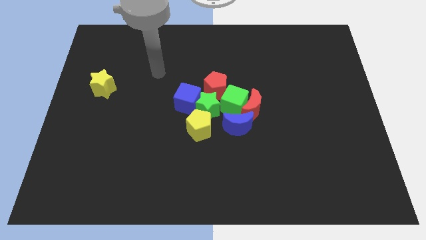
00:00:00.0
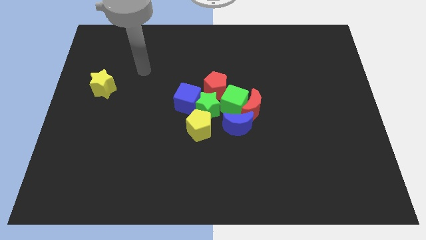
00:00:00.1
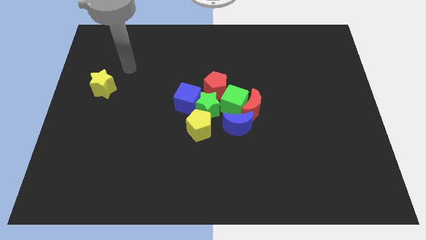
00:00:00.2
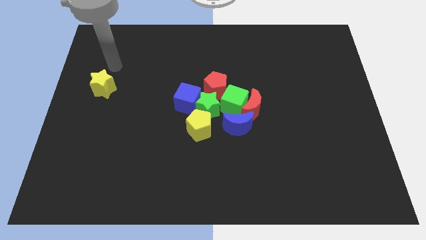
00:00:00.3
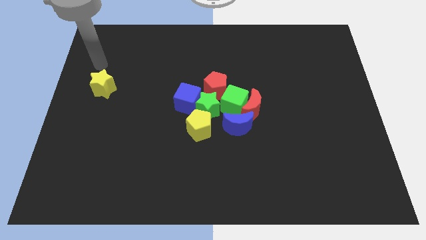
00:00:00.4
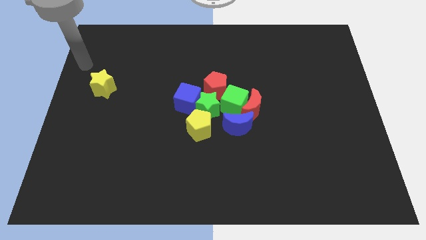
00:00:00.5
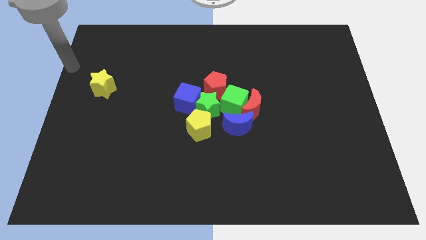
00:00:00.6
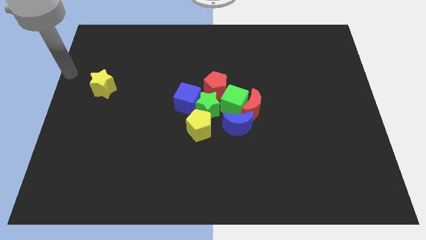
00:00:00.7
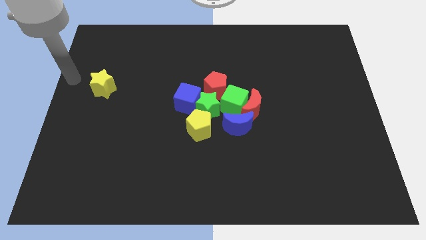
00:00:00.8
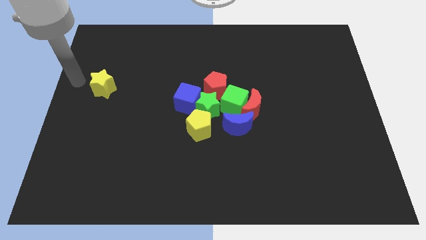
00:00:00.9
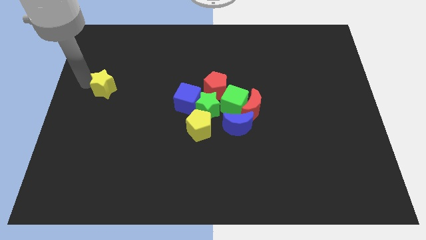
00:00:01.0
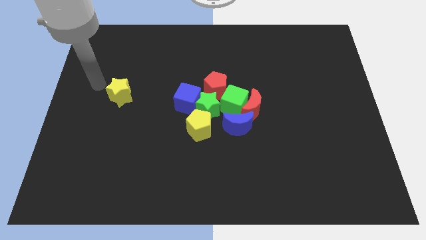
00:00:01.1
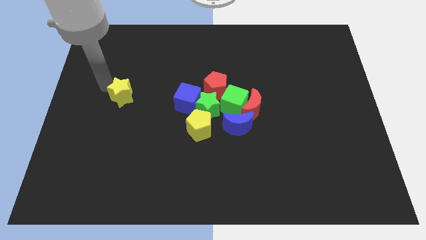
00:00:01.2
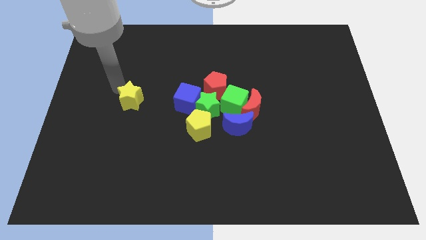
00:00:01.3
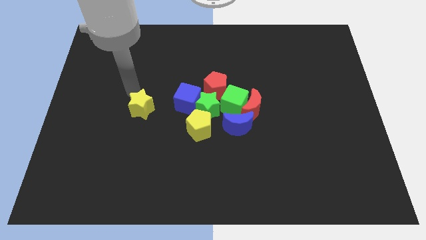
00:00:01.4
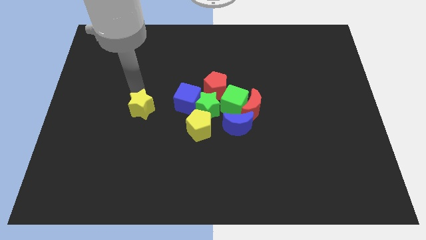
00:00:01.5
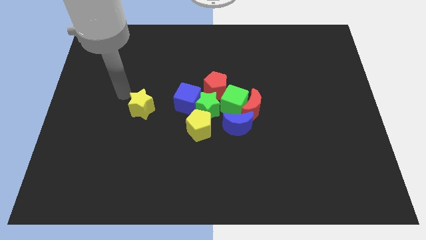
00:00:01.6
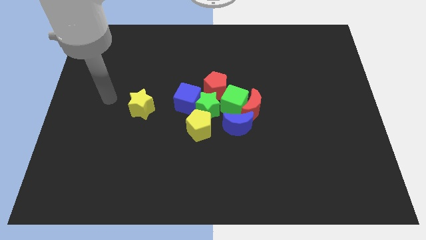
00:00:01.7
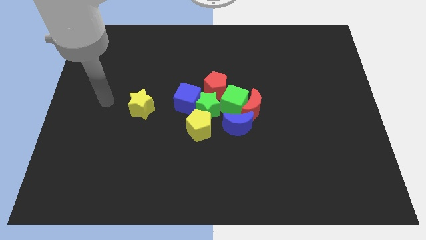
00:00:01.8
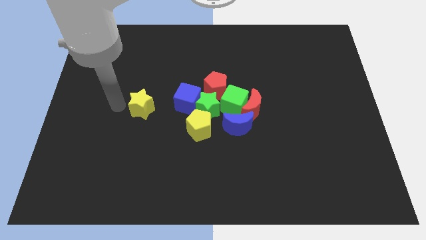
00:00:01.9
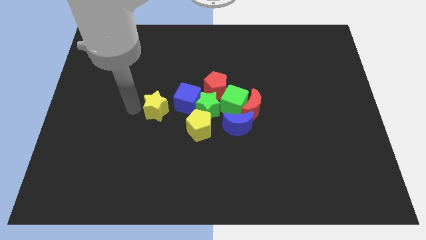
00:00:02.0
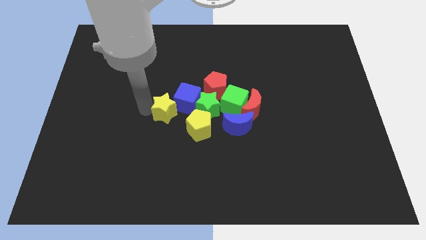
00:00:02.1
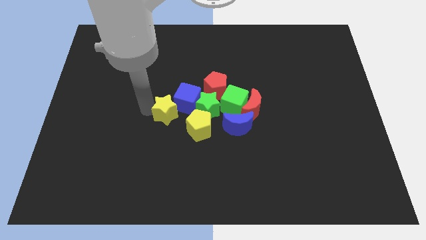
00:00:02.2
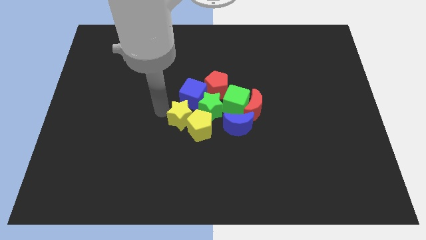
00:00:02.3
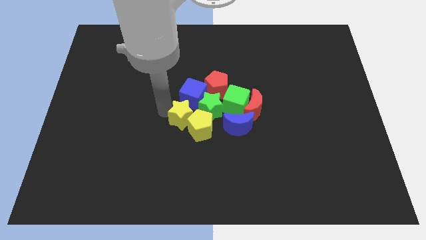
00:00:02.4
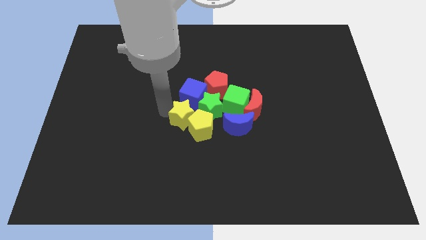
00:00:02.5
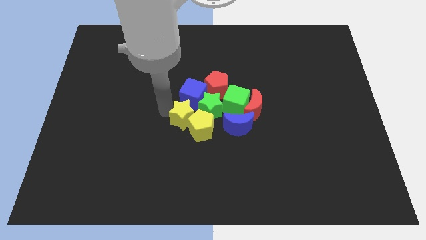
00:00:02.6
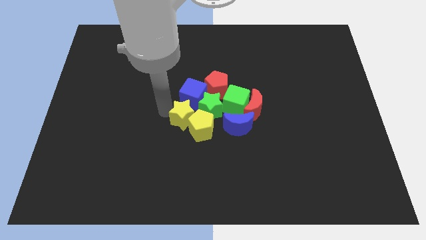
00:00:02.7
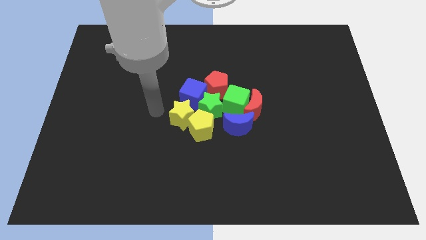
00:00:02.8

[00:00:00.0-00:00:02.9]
move the yellow star into the group of blocks

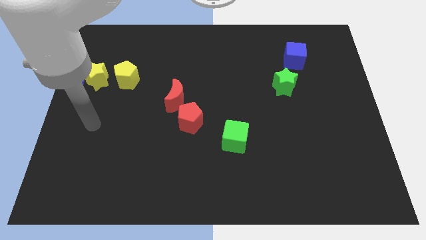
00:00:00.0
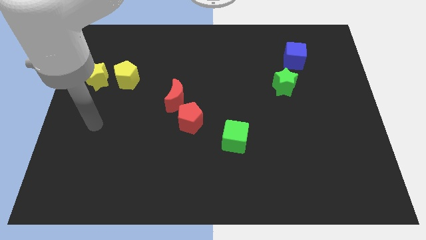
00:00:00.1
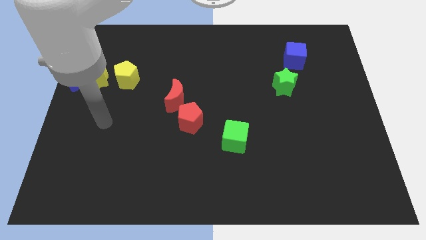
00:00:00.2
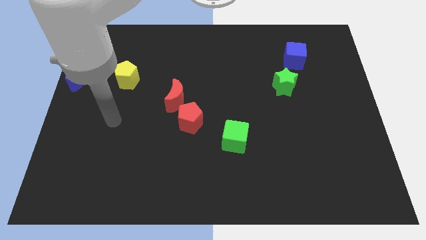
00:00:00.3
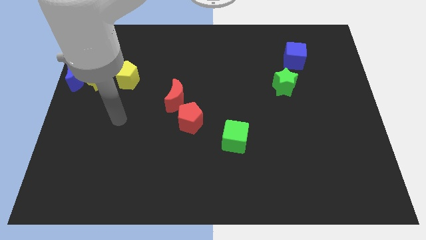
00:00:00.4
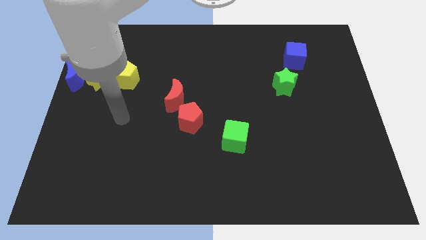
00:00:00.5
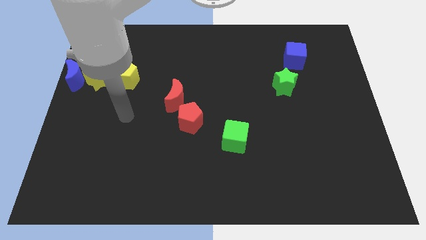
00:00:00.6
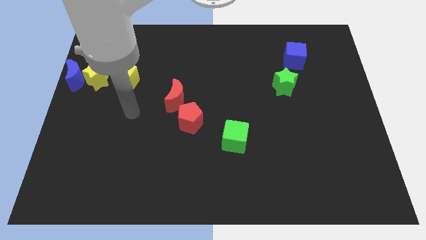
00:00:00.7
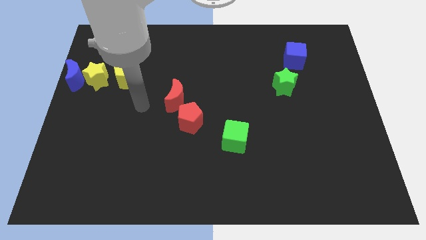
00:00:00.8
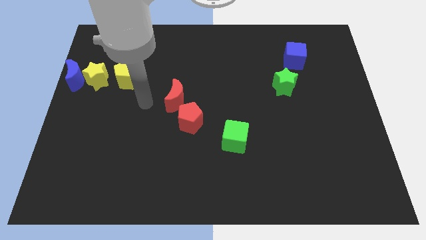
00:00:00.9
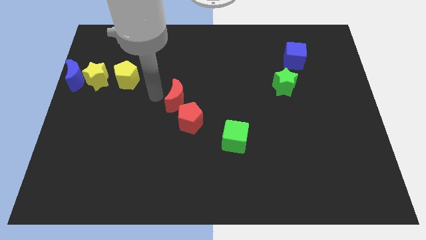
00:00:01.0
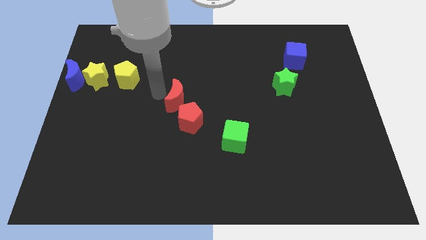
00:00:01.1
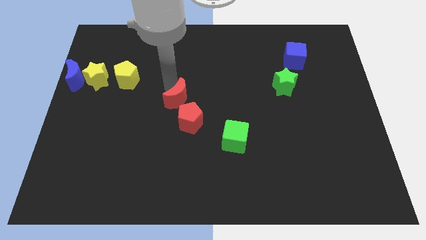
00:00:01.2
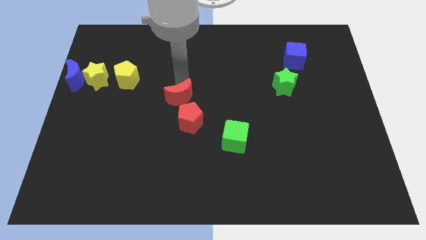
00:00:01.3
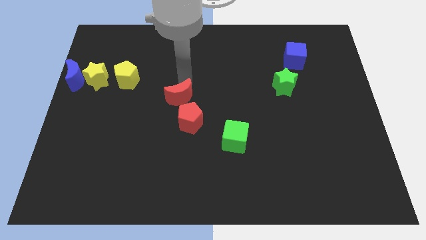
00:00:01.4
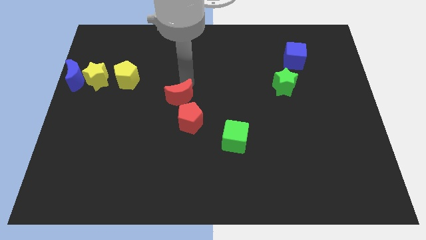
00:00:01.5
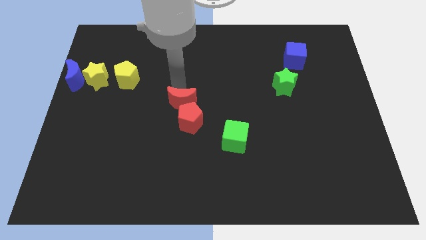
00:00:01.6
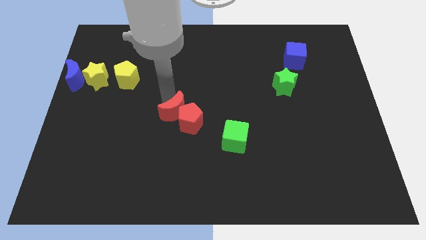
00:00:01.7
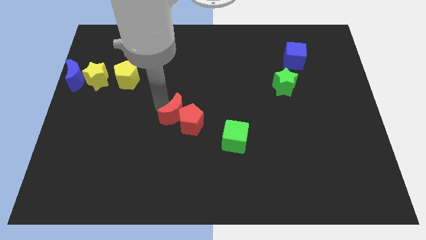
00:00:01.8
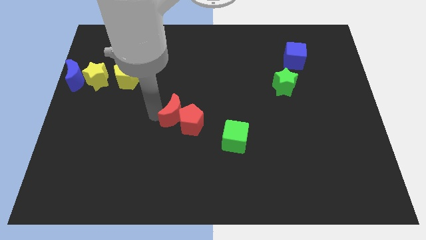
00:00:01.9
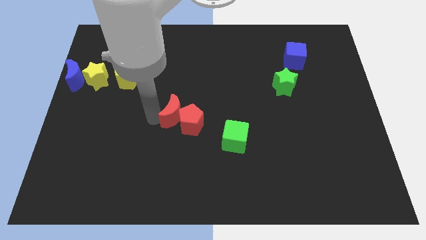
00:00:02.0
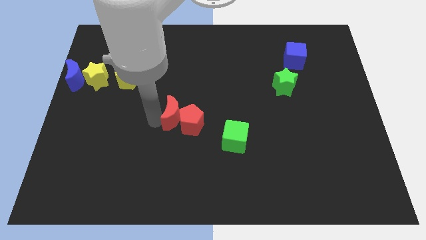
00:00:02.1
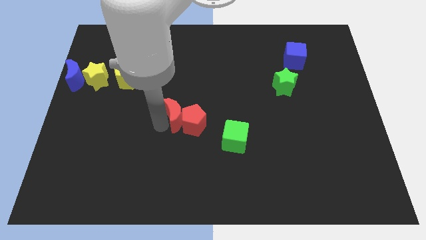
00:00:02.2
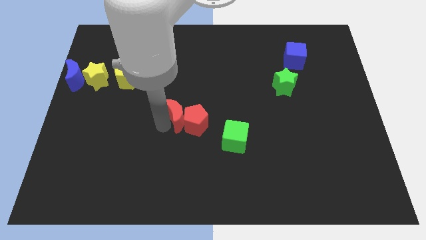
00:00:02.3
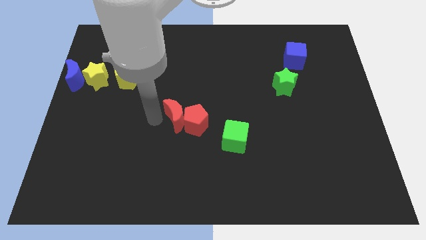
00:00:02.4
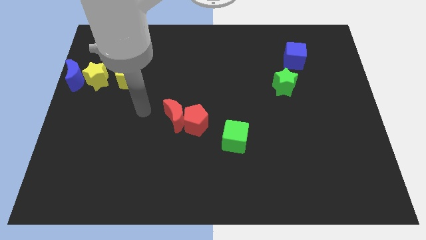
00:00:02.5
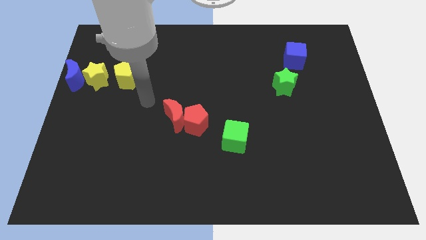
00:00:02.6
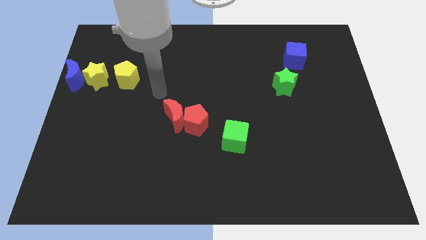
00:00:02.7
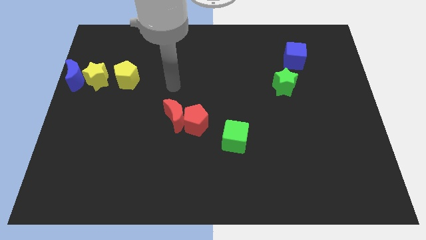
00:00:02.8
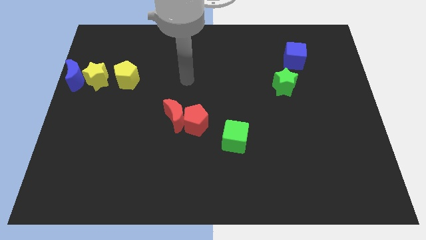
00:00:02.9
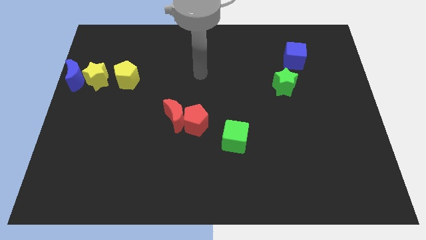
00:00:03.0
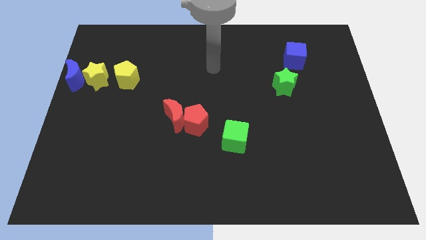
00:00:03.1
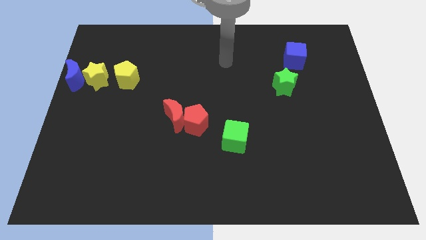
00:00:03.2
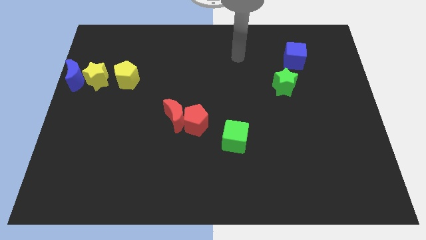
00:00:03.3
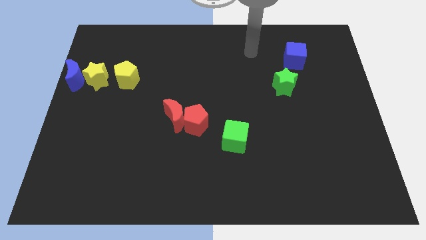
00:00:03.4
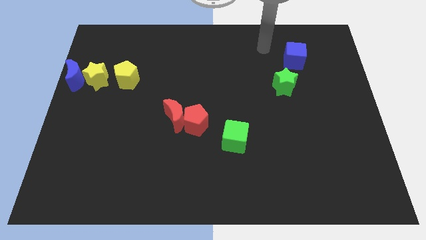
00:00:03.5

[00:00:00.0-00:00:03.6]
push the red moon to the left side of the red pentagon

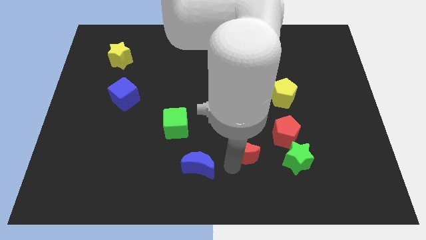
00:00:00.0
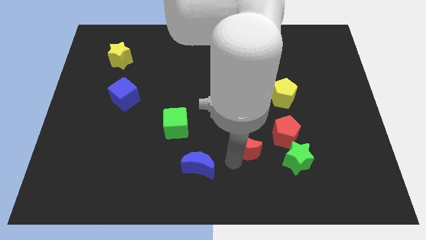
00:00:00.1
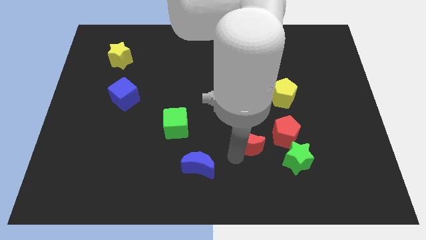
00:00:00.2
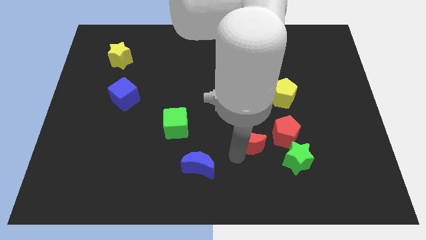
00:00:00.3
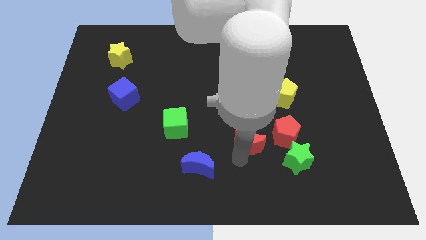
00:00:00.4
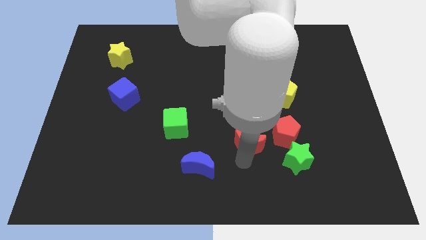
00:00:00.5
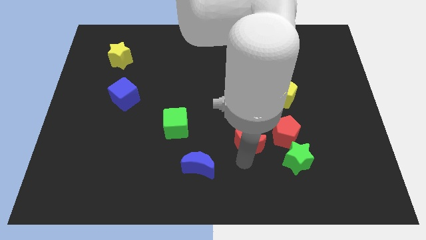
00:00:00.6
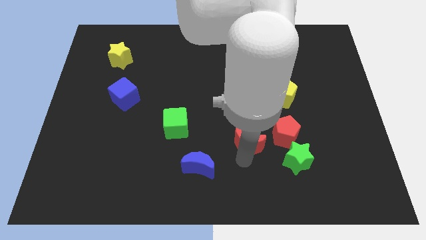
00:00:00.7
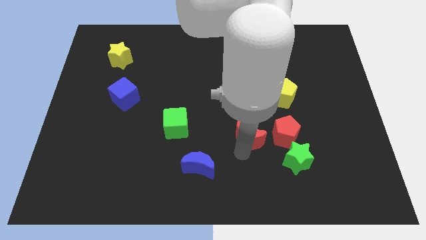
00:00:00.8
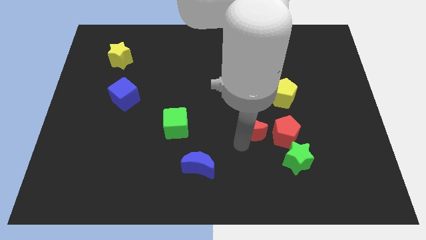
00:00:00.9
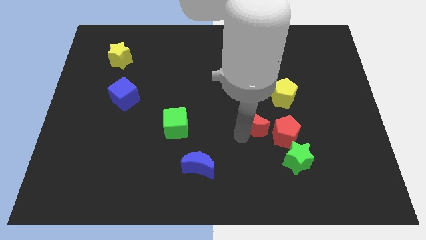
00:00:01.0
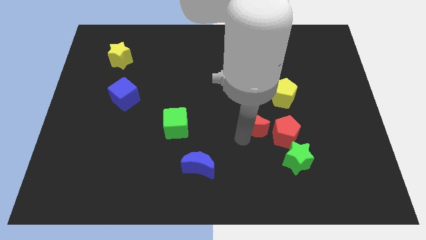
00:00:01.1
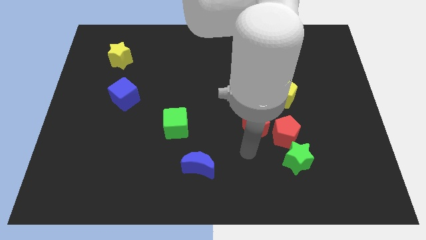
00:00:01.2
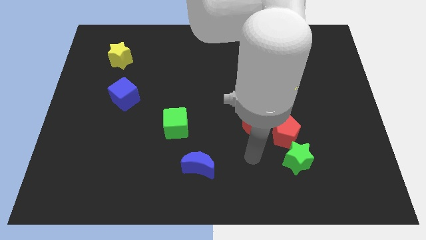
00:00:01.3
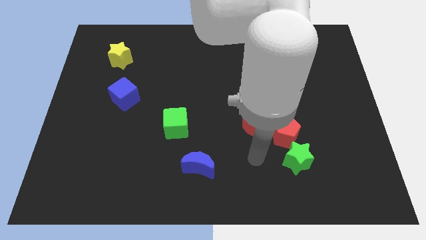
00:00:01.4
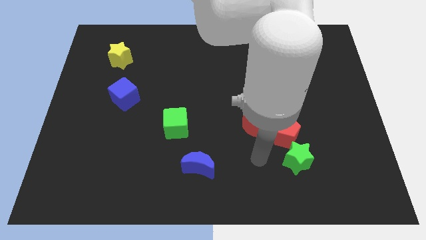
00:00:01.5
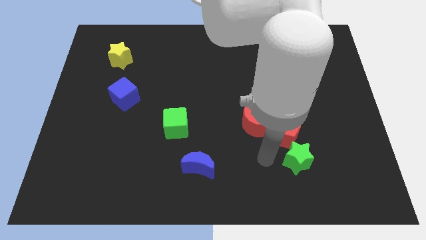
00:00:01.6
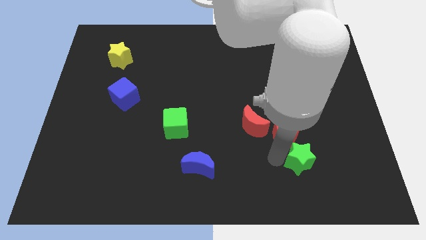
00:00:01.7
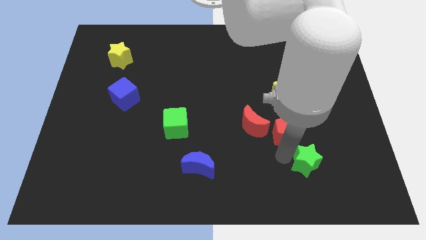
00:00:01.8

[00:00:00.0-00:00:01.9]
move red crescent near red pentagon

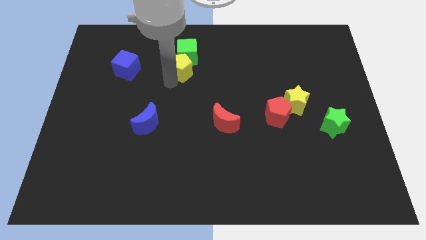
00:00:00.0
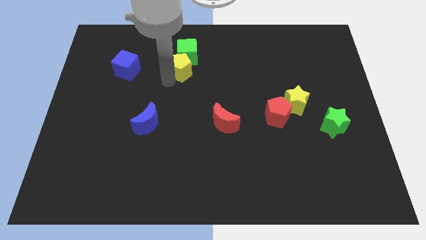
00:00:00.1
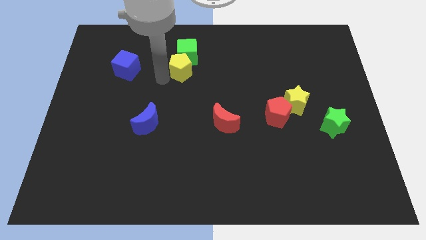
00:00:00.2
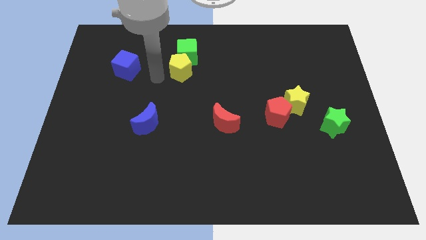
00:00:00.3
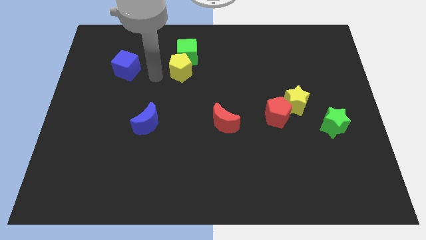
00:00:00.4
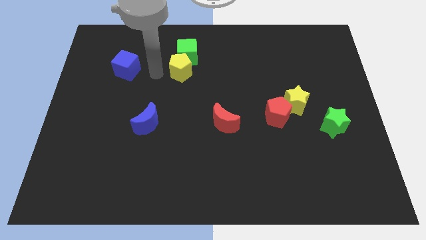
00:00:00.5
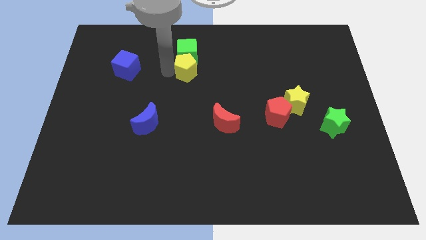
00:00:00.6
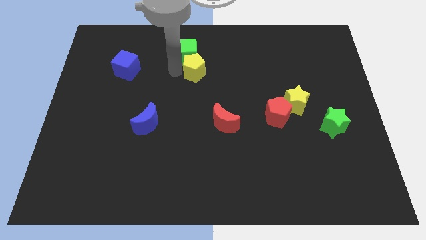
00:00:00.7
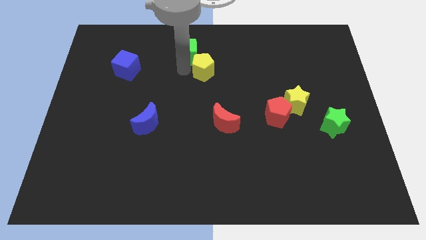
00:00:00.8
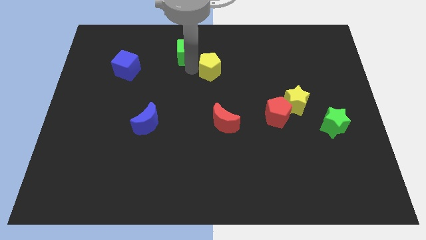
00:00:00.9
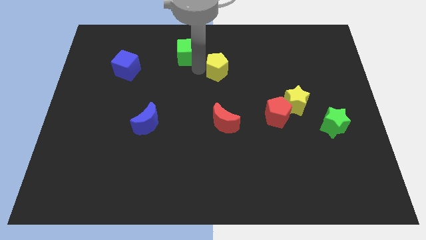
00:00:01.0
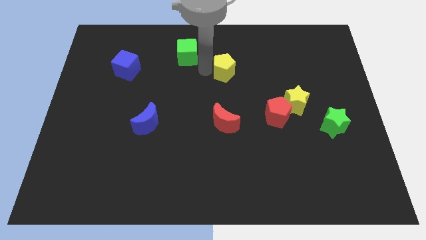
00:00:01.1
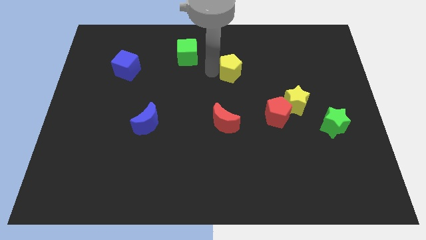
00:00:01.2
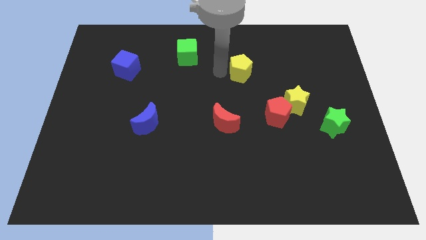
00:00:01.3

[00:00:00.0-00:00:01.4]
place the yellow pentagon above the red crescent
